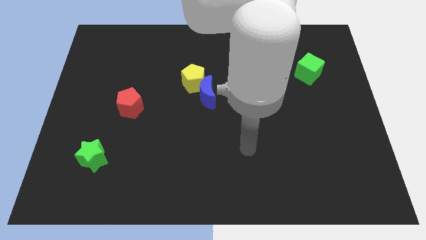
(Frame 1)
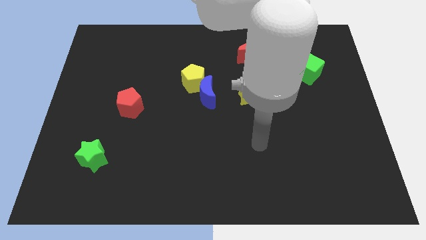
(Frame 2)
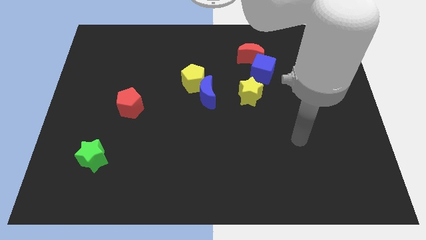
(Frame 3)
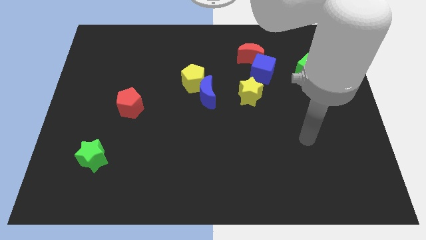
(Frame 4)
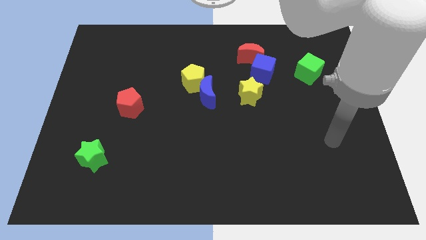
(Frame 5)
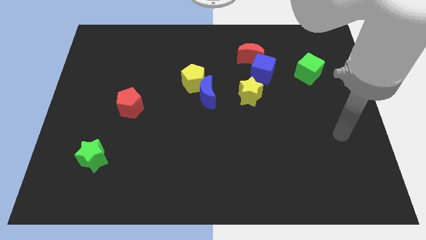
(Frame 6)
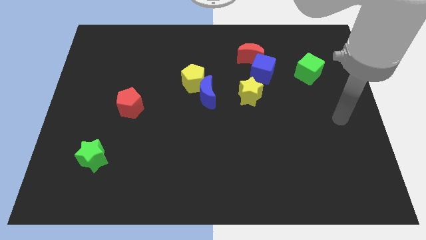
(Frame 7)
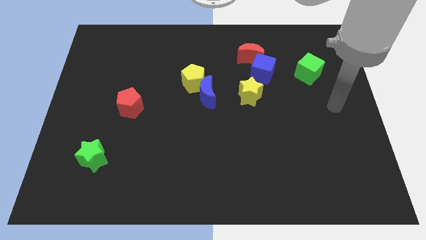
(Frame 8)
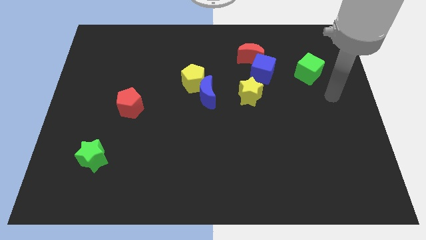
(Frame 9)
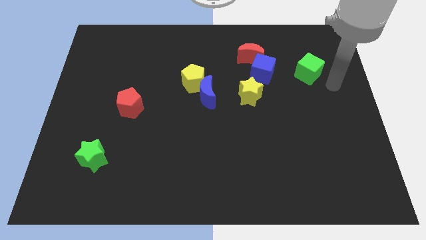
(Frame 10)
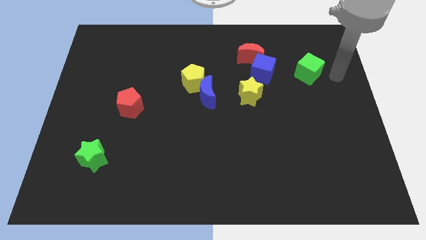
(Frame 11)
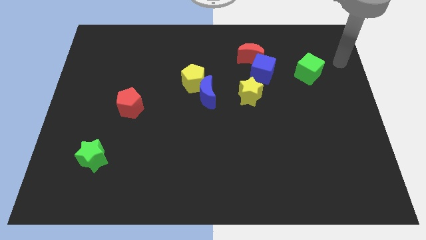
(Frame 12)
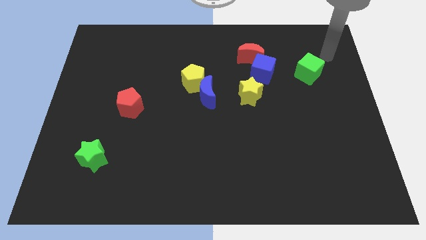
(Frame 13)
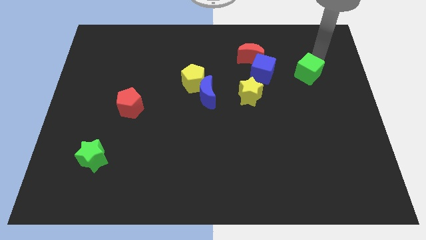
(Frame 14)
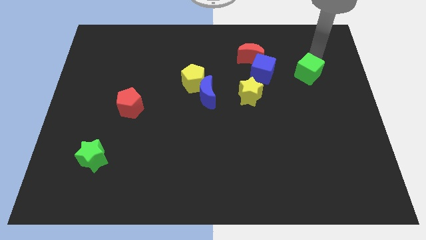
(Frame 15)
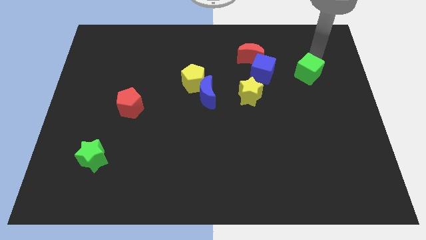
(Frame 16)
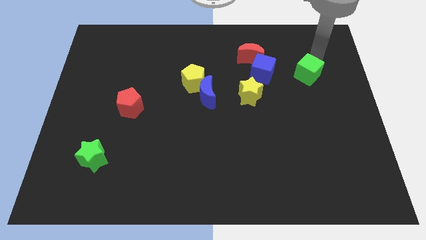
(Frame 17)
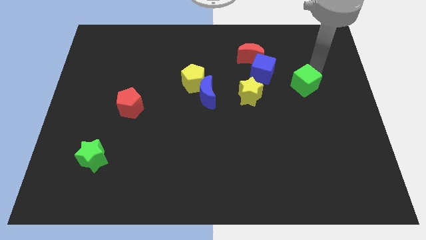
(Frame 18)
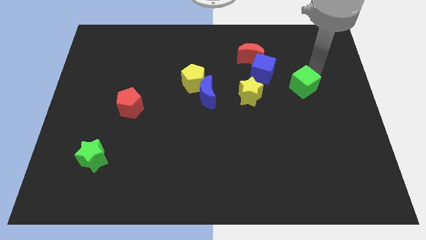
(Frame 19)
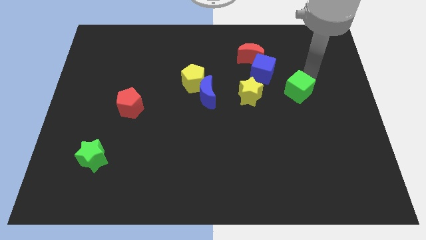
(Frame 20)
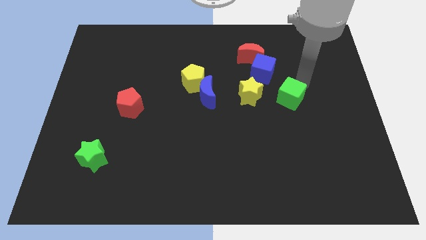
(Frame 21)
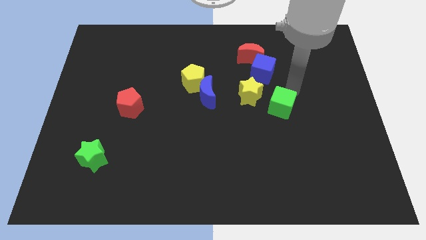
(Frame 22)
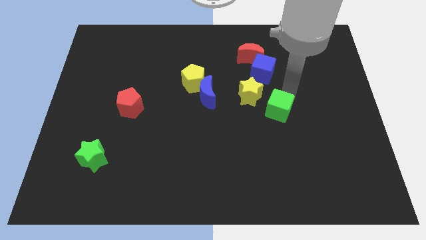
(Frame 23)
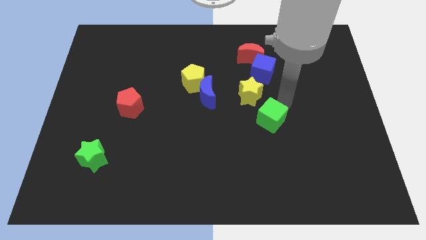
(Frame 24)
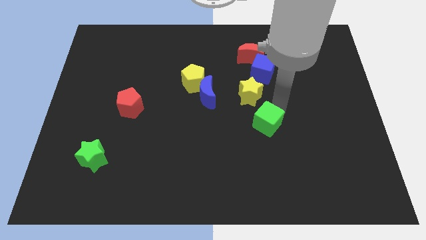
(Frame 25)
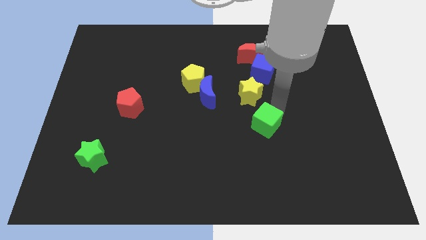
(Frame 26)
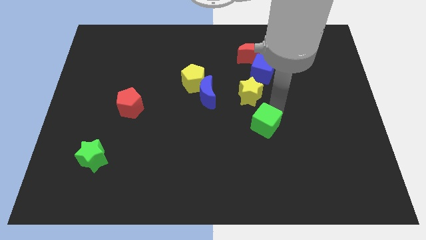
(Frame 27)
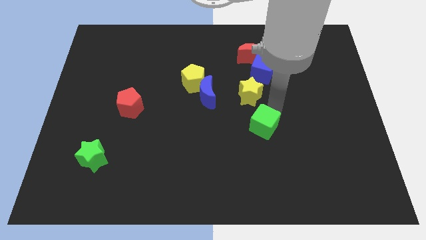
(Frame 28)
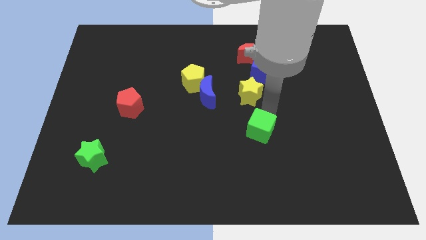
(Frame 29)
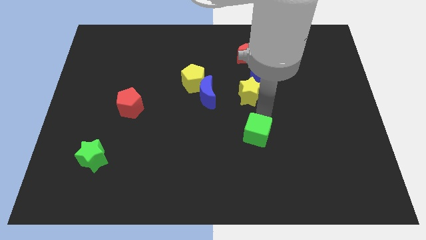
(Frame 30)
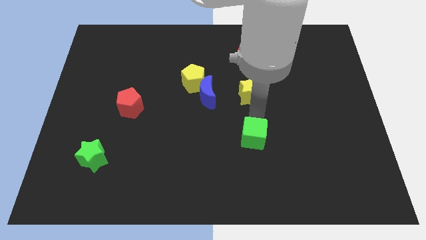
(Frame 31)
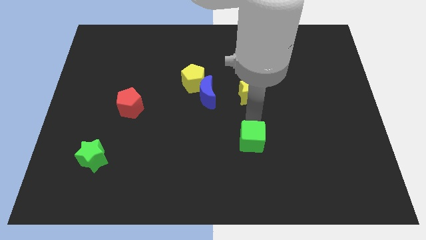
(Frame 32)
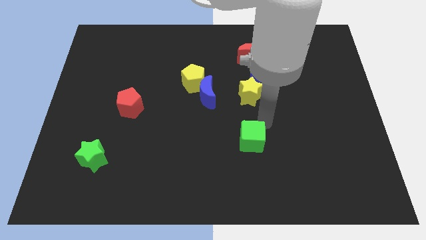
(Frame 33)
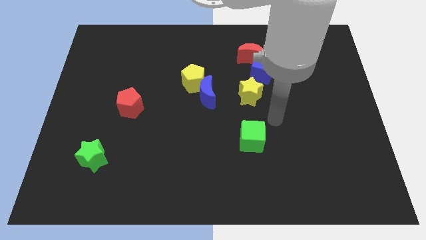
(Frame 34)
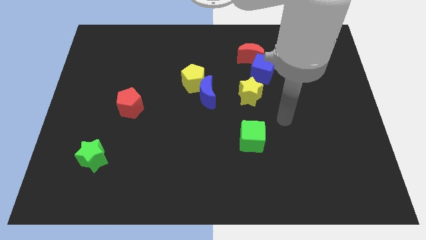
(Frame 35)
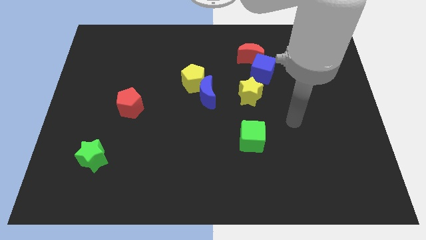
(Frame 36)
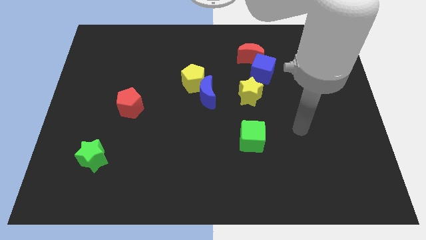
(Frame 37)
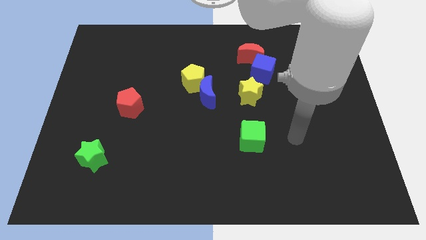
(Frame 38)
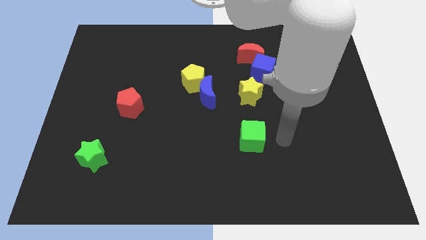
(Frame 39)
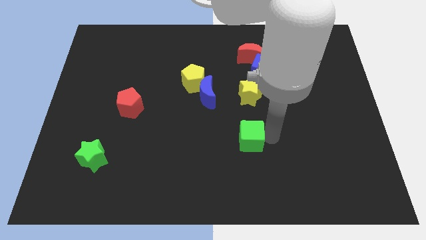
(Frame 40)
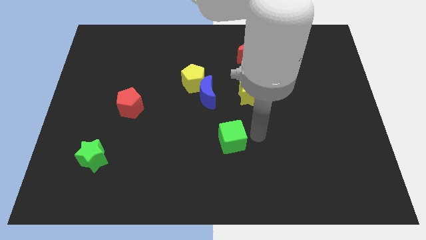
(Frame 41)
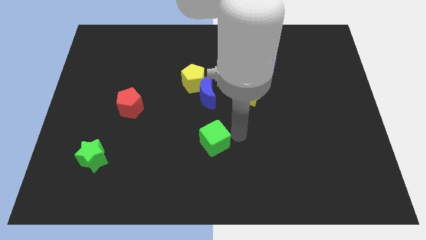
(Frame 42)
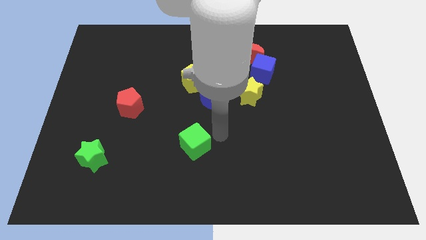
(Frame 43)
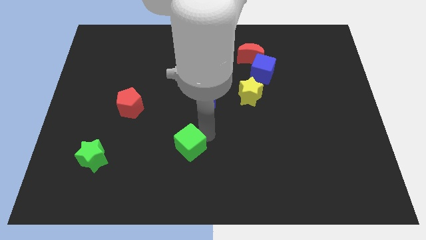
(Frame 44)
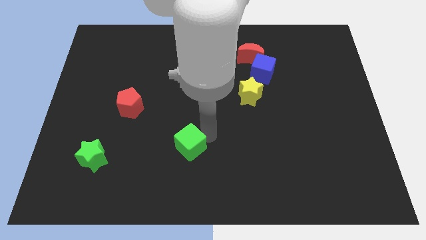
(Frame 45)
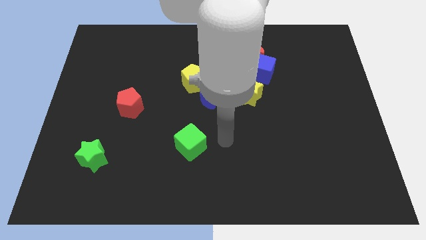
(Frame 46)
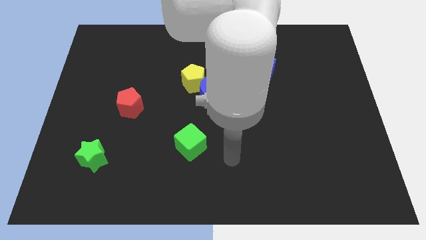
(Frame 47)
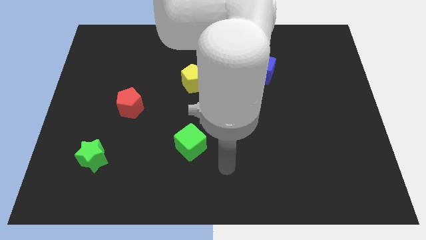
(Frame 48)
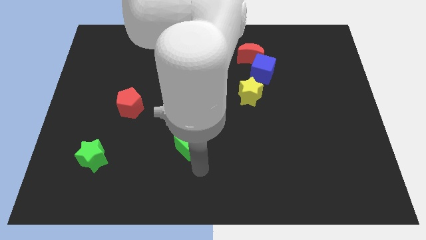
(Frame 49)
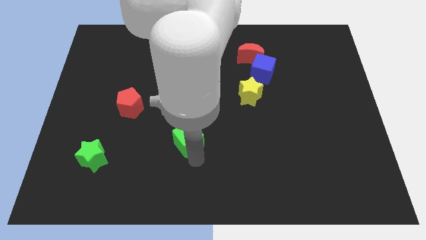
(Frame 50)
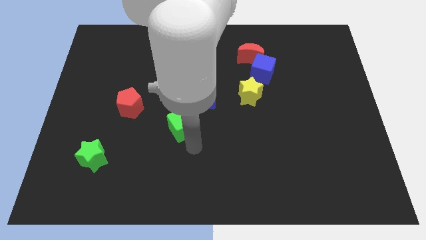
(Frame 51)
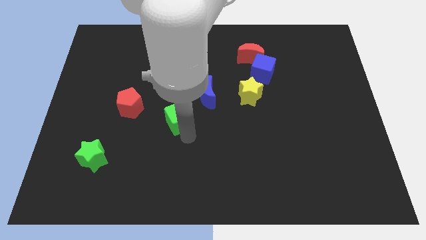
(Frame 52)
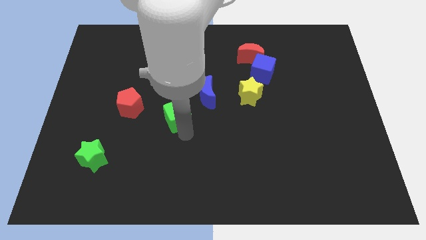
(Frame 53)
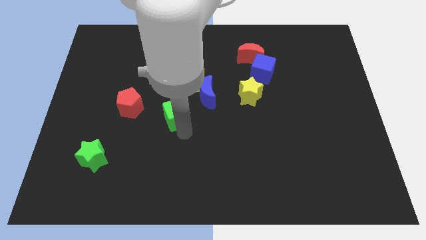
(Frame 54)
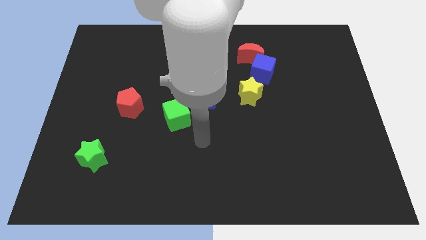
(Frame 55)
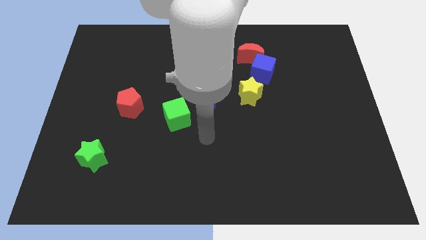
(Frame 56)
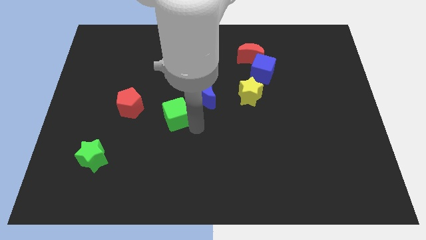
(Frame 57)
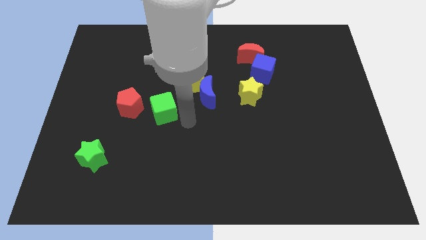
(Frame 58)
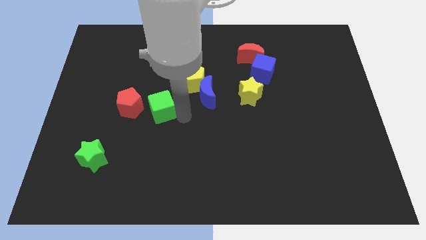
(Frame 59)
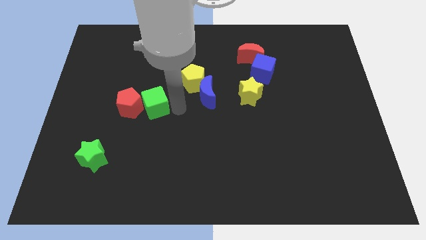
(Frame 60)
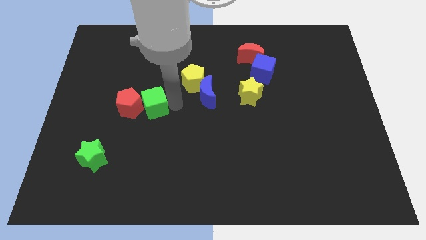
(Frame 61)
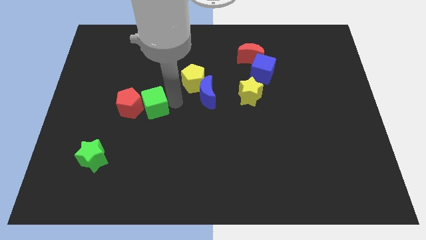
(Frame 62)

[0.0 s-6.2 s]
push the green cube towards the red pentagon

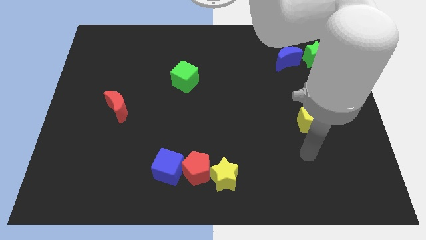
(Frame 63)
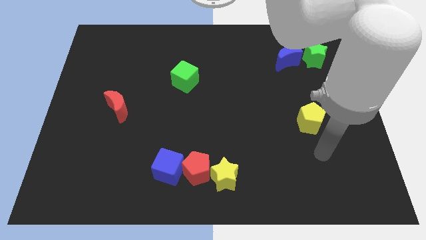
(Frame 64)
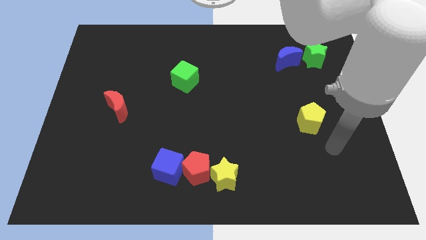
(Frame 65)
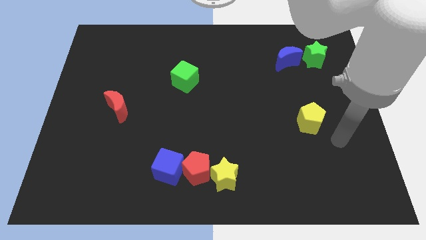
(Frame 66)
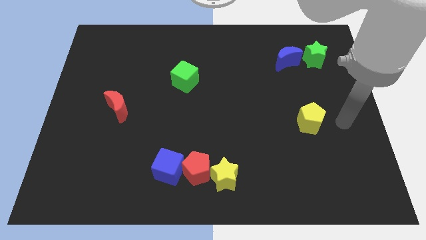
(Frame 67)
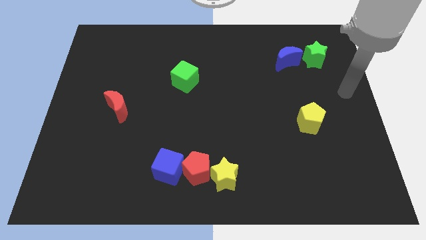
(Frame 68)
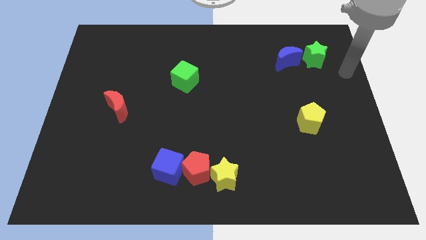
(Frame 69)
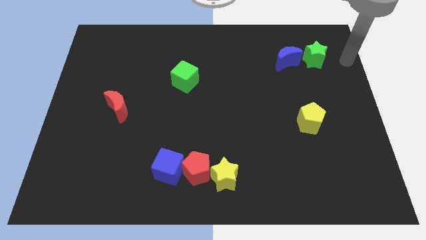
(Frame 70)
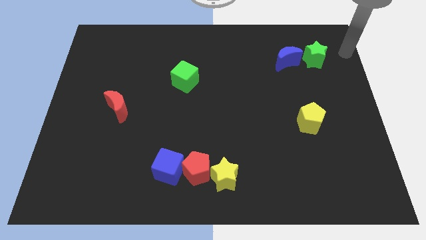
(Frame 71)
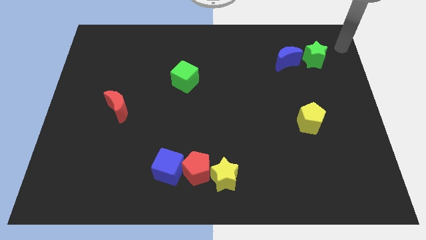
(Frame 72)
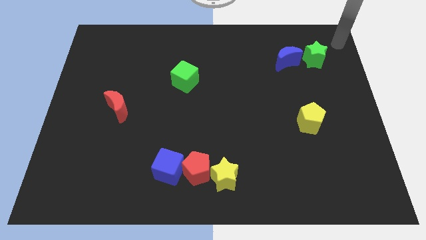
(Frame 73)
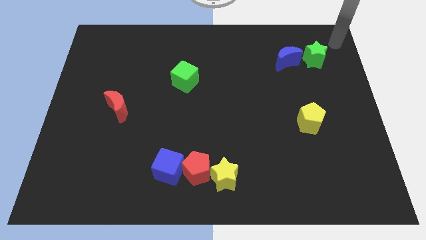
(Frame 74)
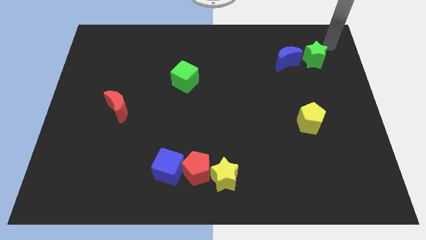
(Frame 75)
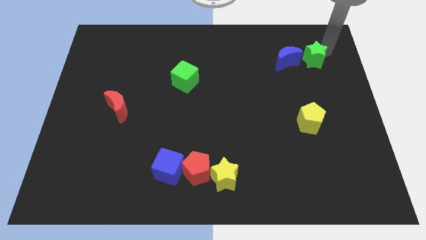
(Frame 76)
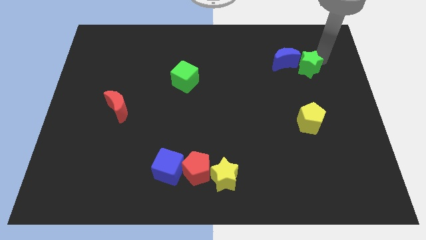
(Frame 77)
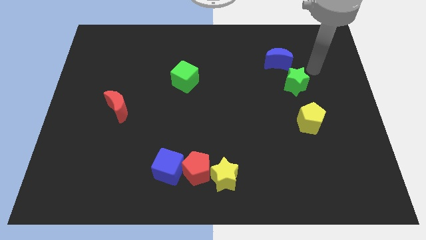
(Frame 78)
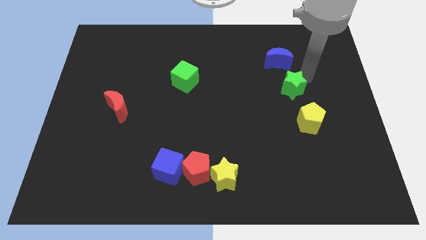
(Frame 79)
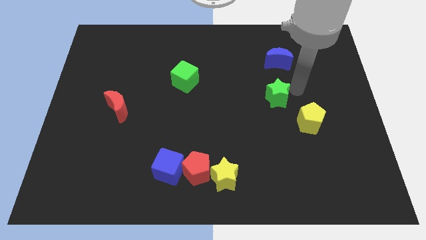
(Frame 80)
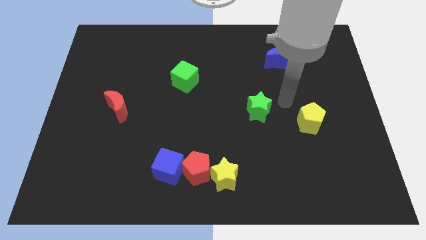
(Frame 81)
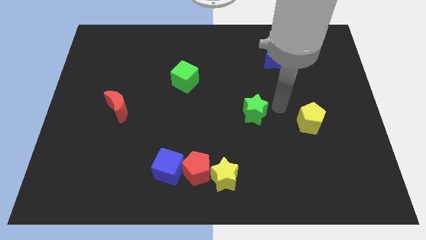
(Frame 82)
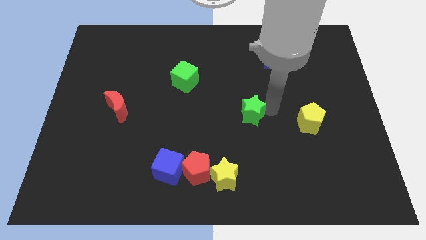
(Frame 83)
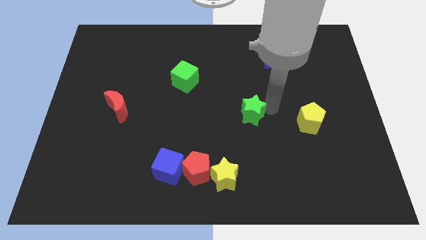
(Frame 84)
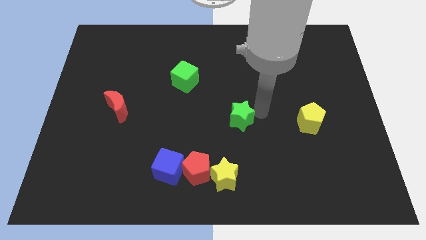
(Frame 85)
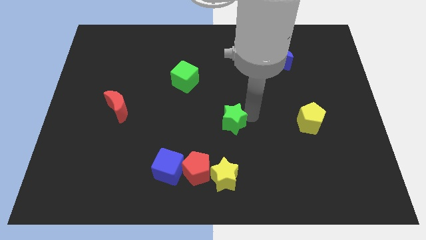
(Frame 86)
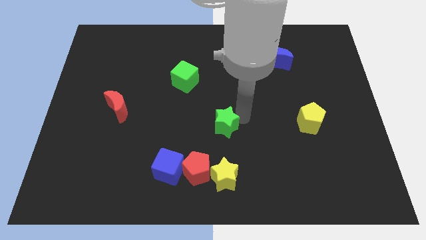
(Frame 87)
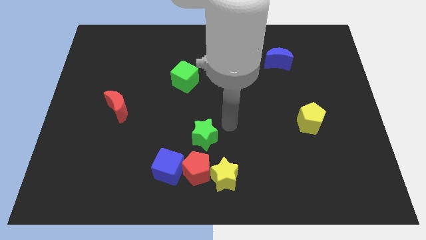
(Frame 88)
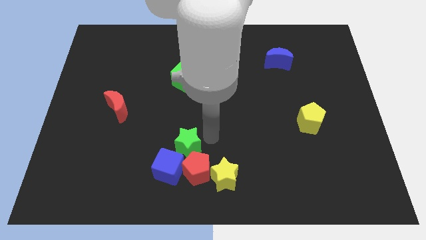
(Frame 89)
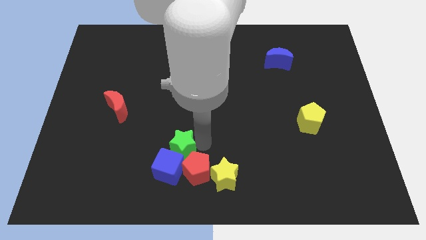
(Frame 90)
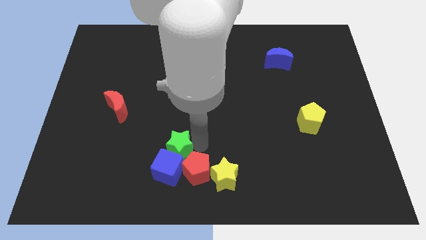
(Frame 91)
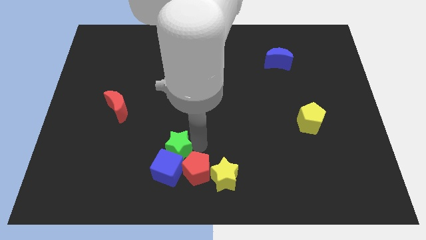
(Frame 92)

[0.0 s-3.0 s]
put the green star towards the blue cube
